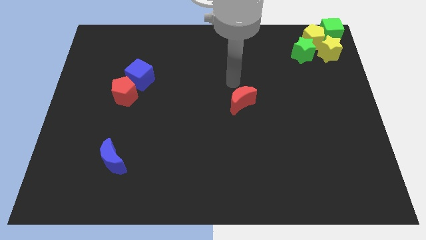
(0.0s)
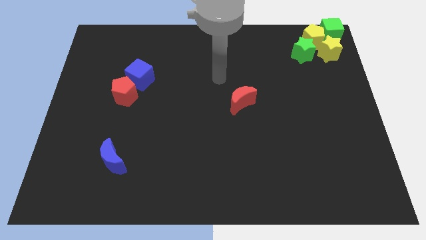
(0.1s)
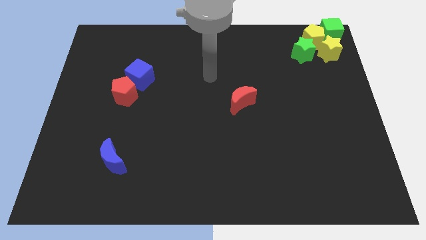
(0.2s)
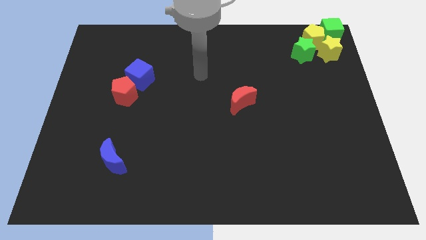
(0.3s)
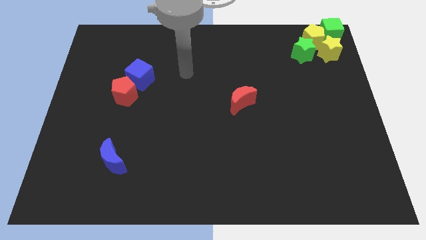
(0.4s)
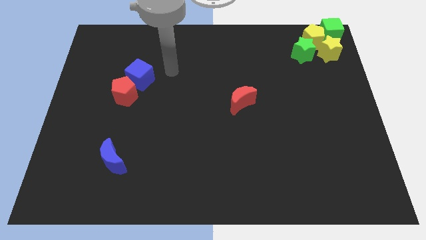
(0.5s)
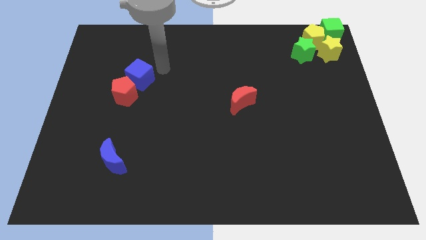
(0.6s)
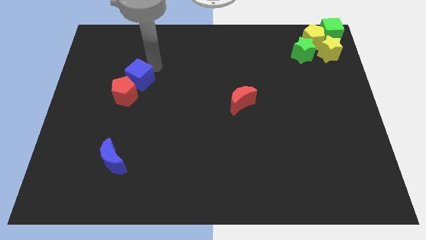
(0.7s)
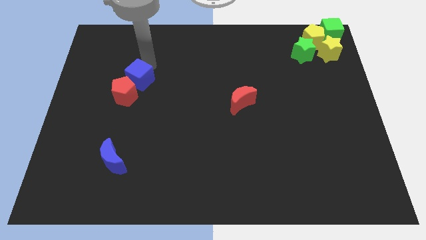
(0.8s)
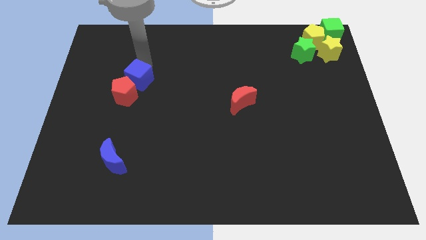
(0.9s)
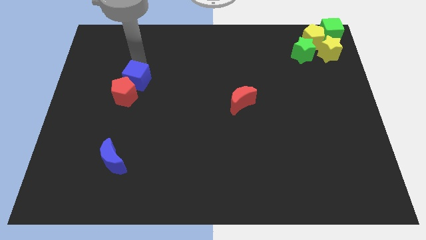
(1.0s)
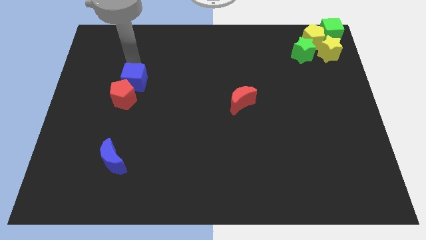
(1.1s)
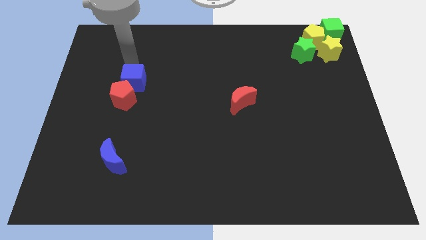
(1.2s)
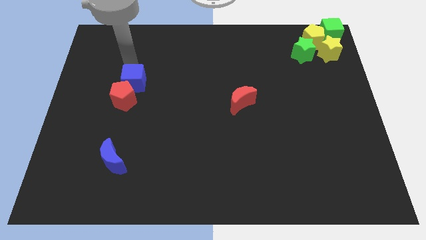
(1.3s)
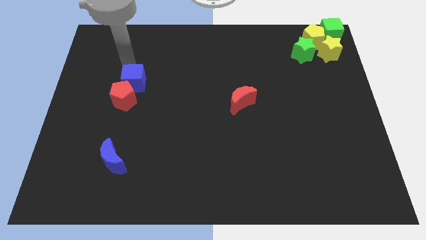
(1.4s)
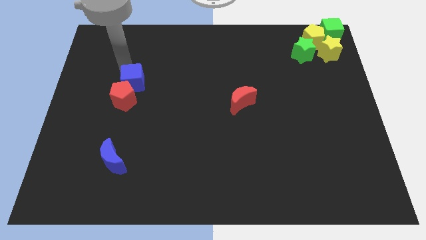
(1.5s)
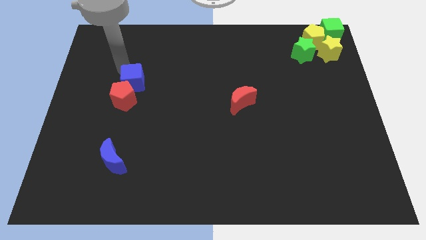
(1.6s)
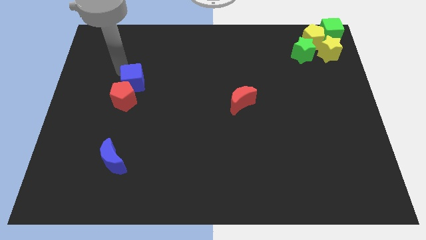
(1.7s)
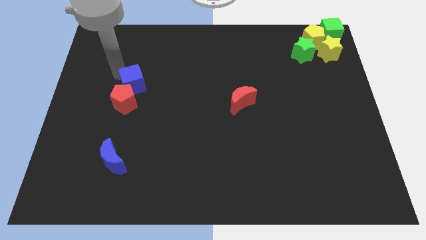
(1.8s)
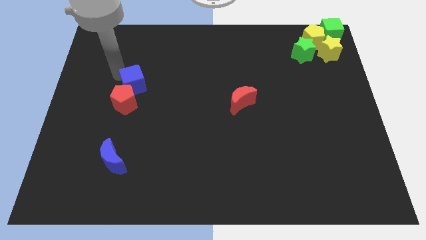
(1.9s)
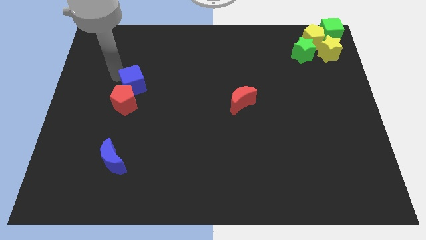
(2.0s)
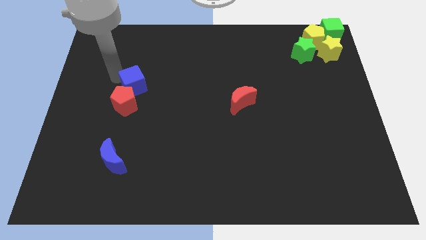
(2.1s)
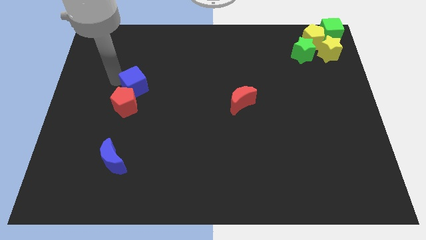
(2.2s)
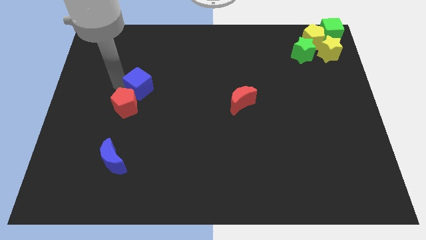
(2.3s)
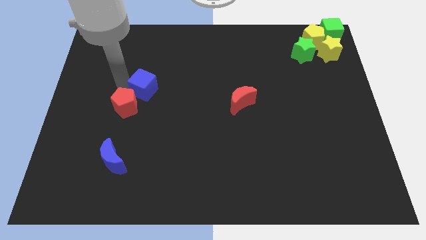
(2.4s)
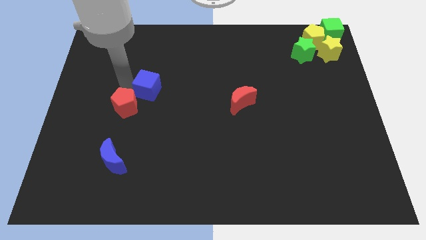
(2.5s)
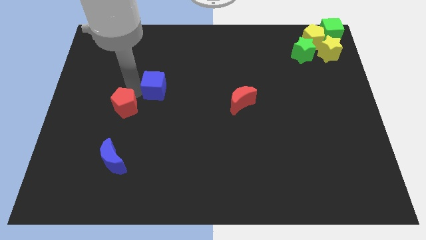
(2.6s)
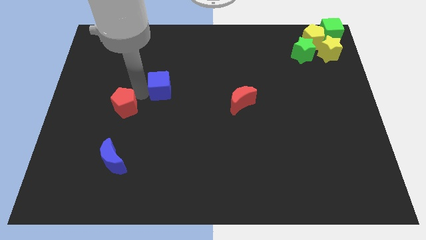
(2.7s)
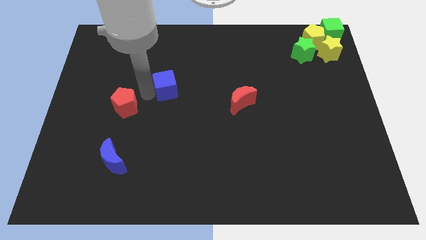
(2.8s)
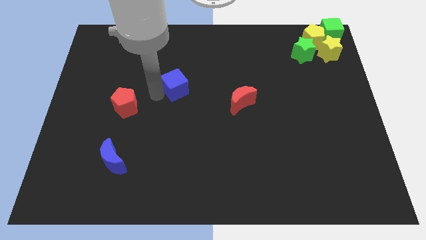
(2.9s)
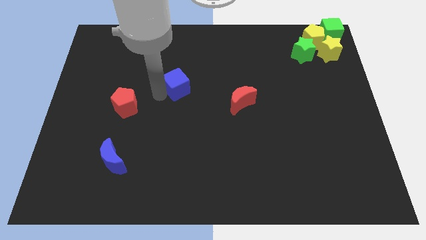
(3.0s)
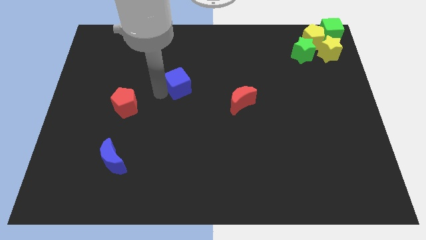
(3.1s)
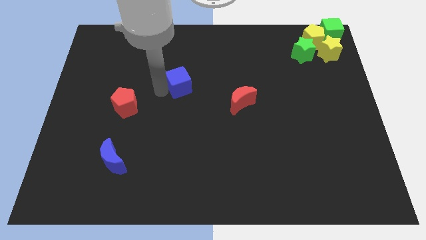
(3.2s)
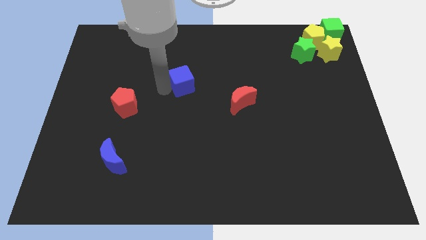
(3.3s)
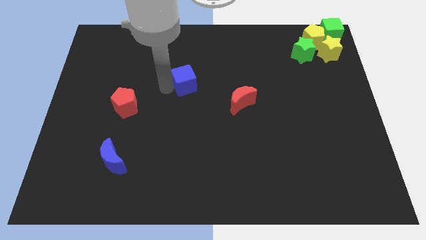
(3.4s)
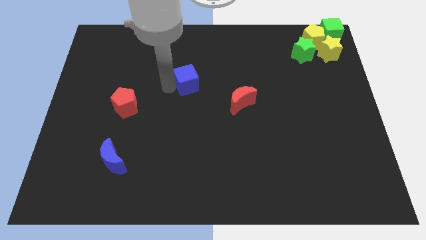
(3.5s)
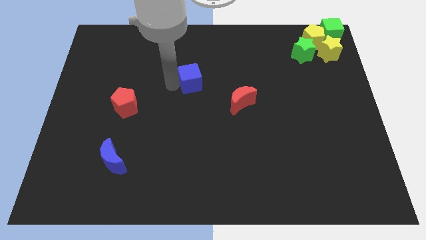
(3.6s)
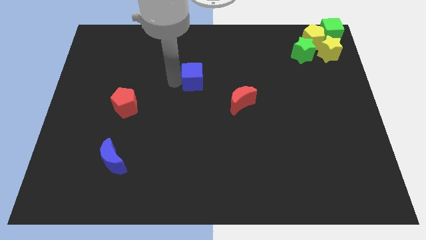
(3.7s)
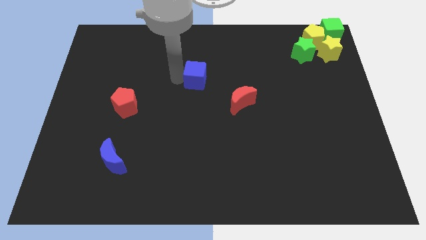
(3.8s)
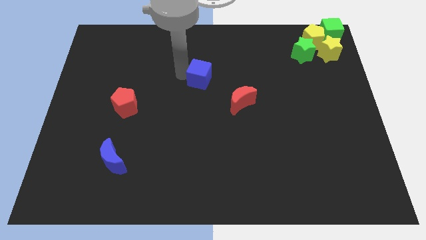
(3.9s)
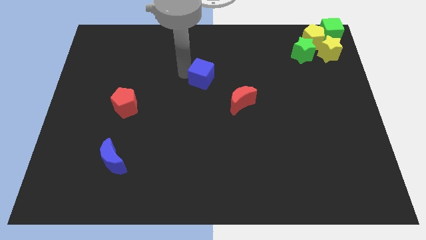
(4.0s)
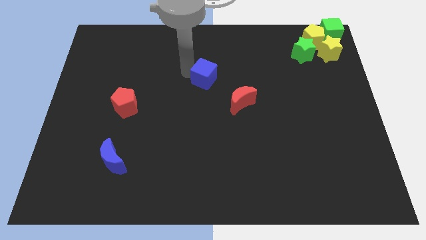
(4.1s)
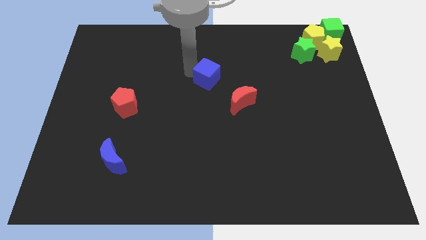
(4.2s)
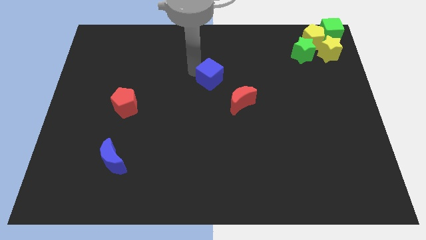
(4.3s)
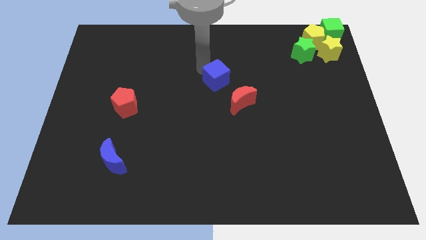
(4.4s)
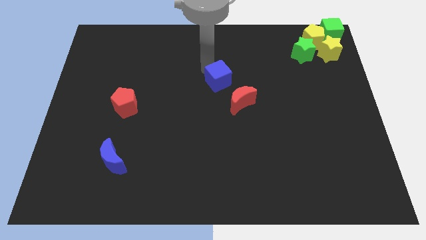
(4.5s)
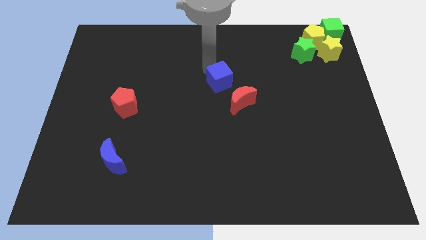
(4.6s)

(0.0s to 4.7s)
place the blue cube to the top of the red moon

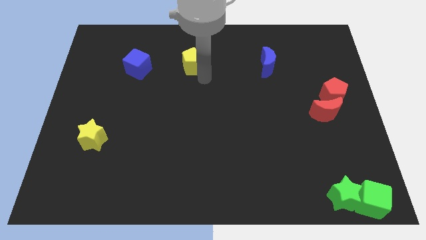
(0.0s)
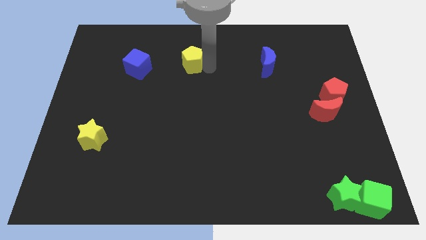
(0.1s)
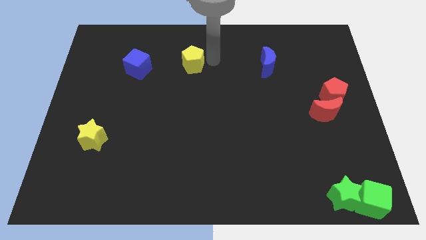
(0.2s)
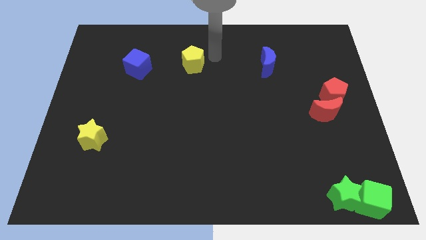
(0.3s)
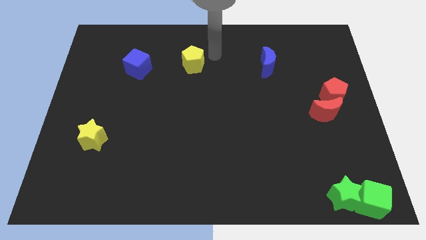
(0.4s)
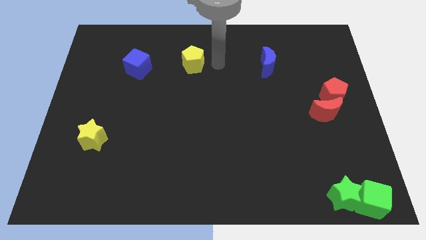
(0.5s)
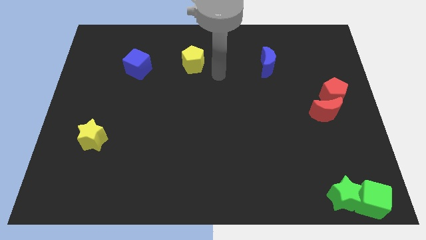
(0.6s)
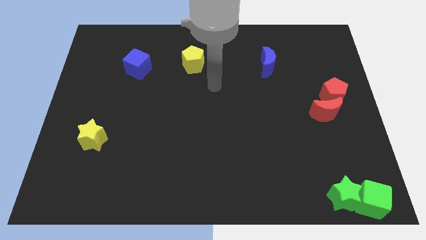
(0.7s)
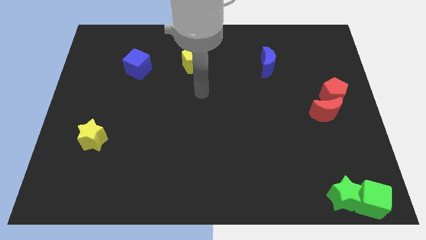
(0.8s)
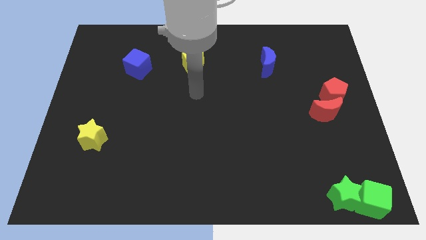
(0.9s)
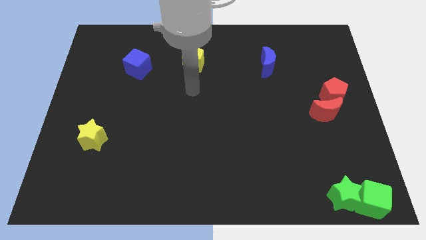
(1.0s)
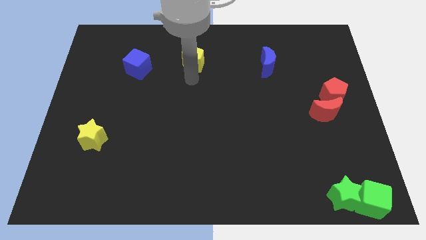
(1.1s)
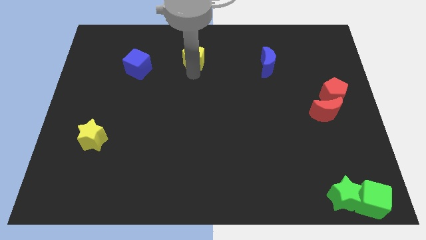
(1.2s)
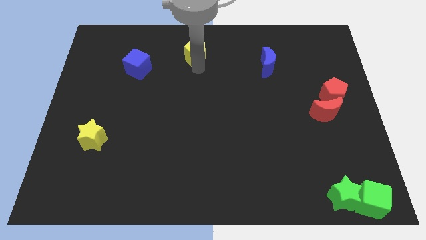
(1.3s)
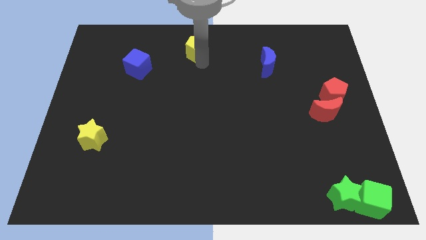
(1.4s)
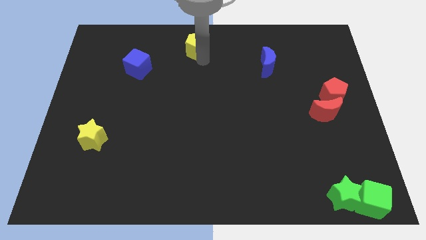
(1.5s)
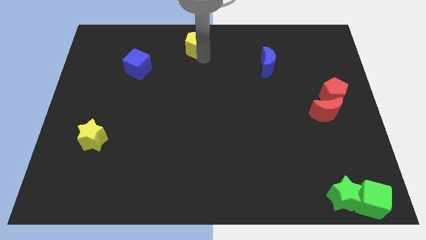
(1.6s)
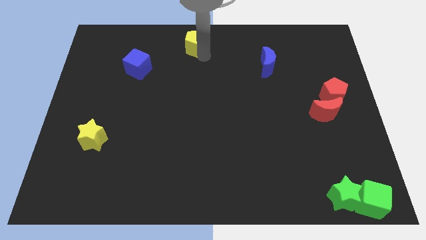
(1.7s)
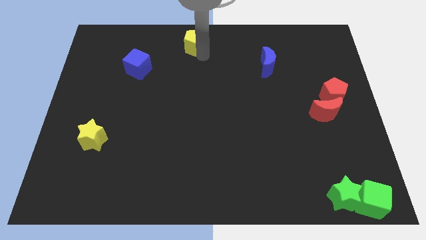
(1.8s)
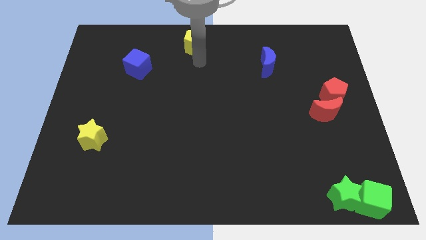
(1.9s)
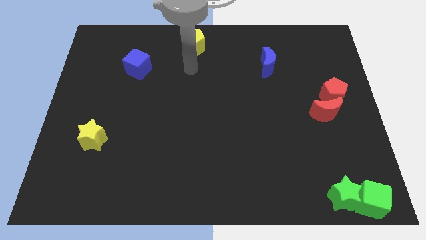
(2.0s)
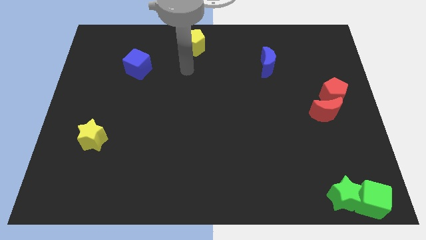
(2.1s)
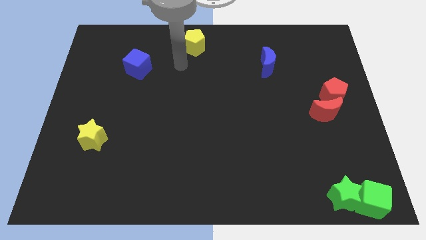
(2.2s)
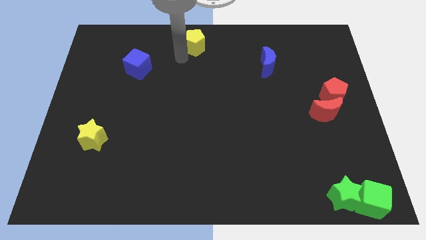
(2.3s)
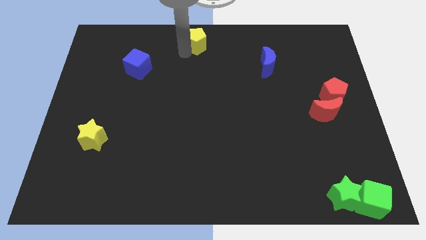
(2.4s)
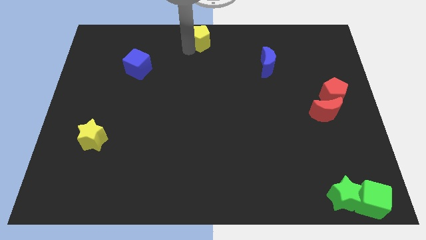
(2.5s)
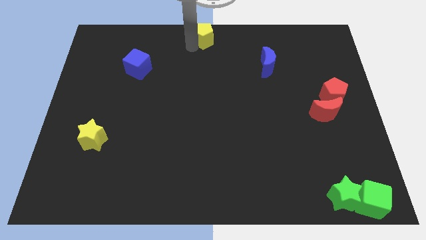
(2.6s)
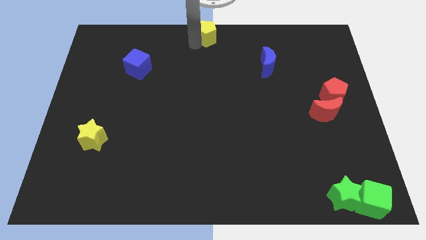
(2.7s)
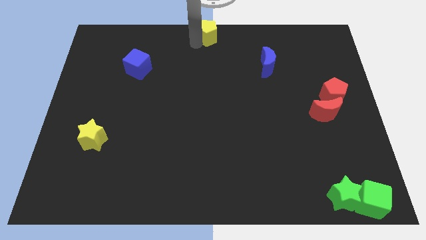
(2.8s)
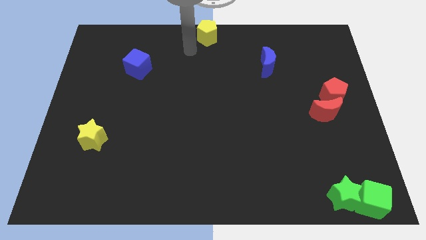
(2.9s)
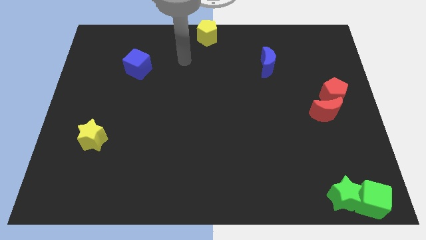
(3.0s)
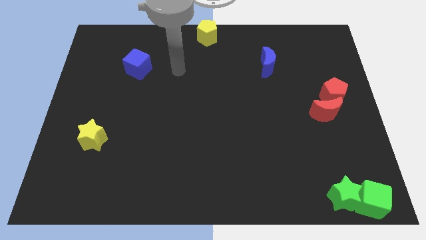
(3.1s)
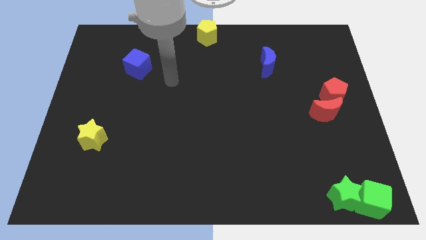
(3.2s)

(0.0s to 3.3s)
place the yellow pentagon to the top middle of the board

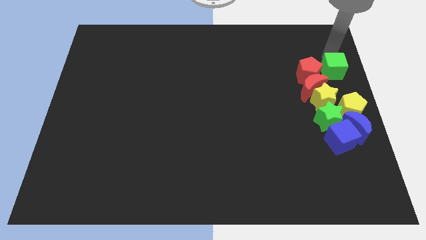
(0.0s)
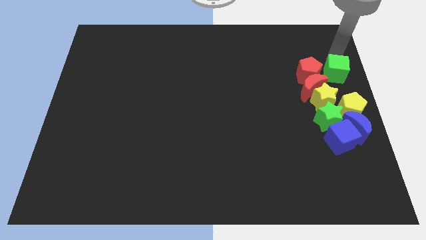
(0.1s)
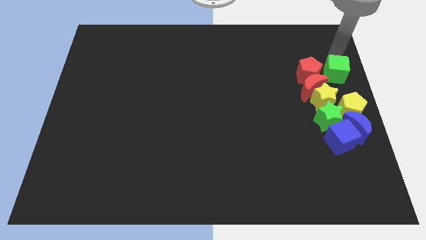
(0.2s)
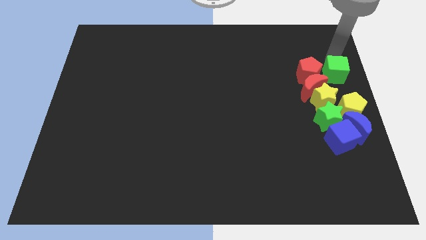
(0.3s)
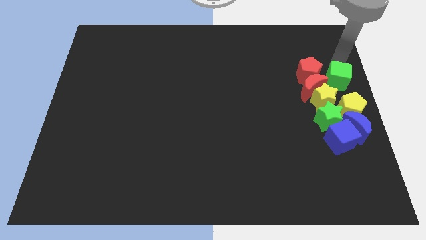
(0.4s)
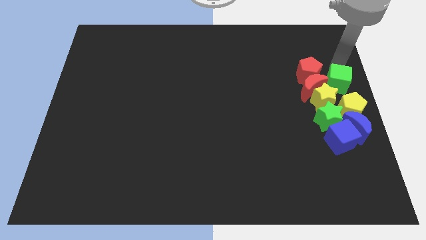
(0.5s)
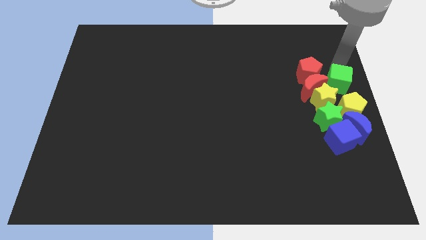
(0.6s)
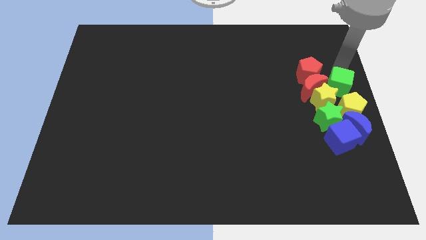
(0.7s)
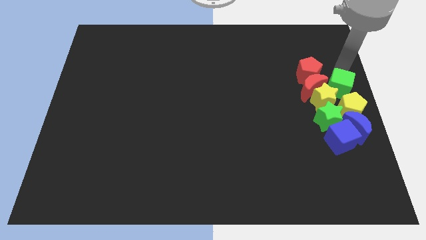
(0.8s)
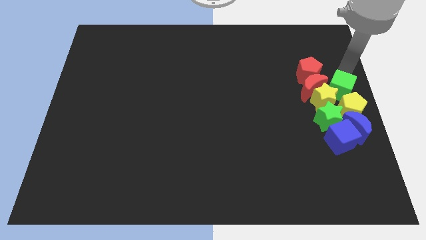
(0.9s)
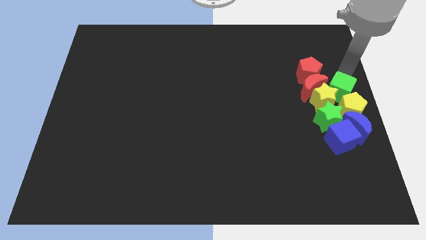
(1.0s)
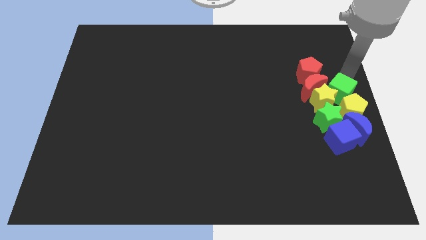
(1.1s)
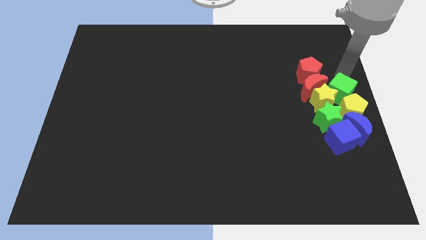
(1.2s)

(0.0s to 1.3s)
place the green cube above the yellow pentagon
